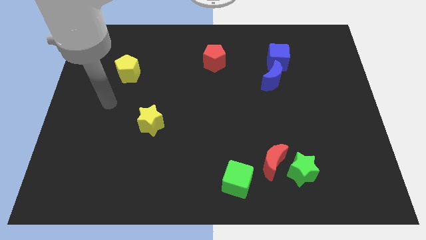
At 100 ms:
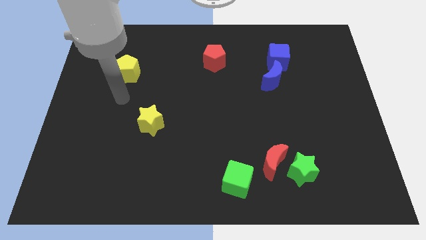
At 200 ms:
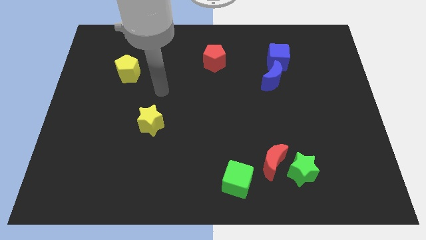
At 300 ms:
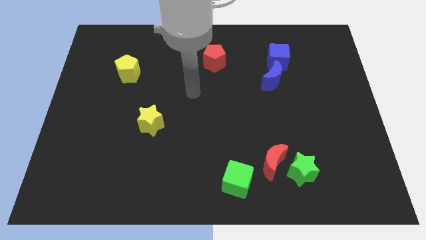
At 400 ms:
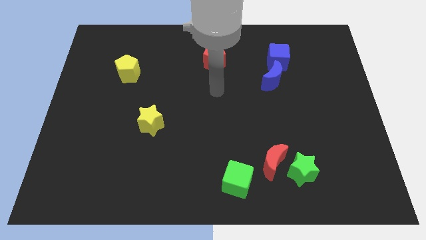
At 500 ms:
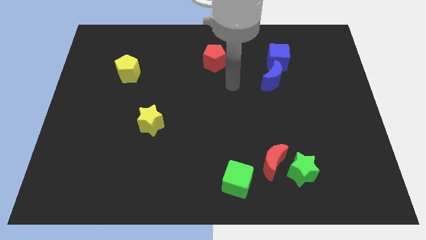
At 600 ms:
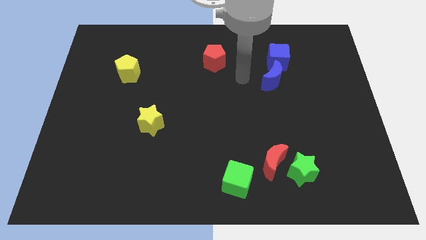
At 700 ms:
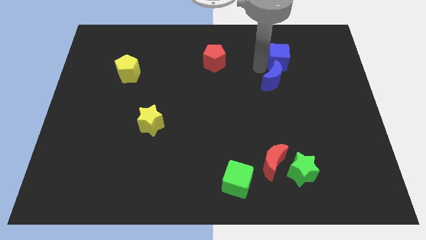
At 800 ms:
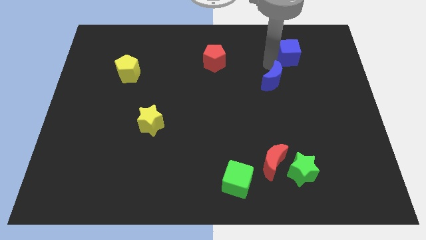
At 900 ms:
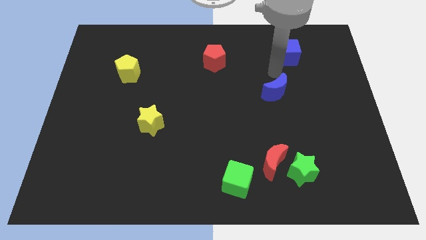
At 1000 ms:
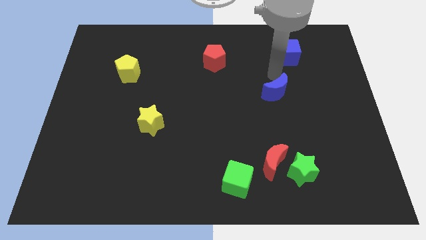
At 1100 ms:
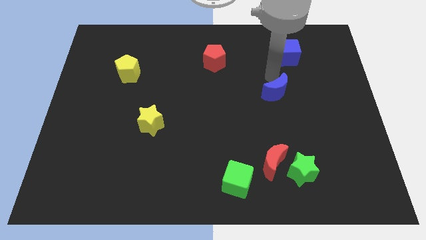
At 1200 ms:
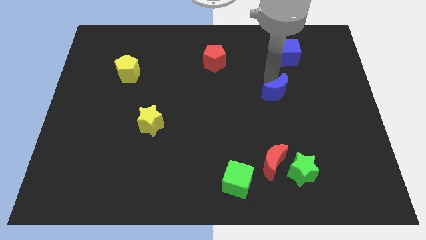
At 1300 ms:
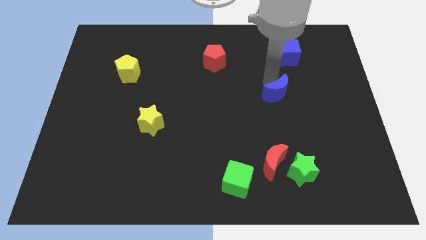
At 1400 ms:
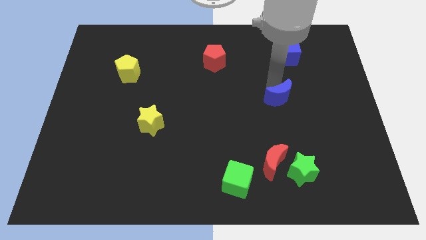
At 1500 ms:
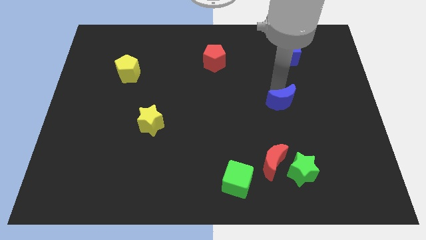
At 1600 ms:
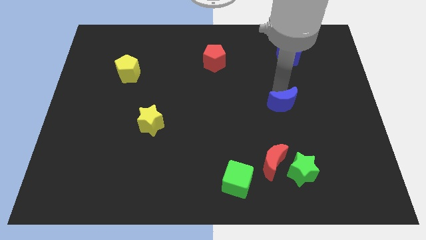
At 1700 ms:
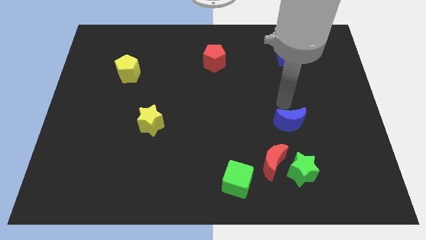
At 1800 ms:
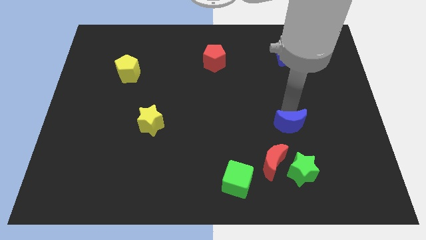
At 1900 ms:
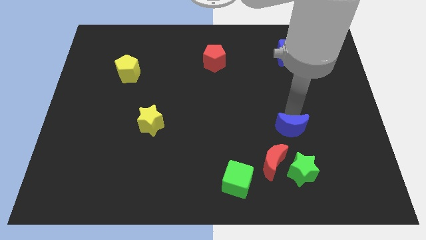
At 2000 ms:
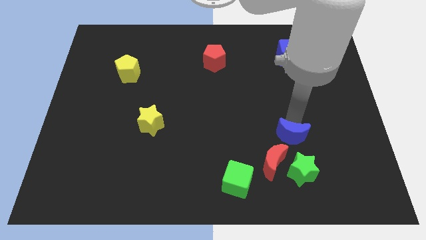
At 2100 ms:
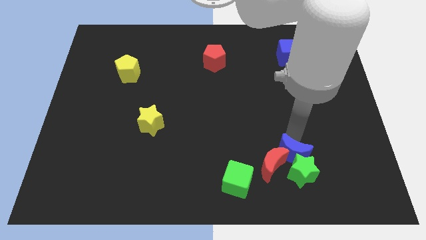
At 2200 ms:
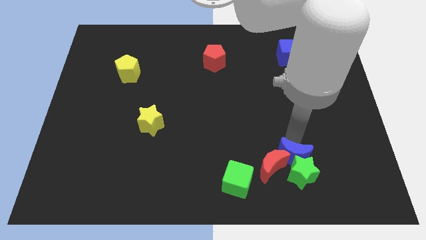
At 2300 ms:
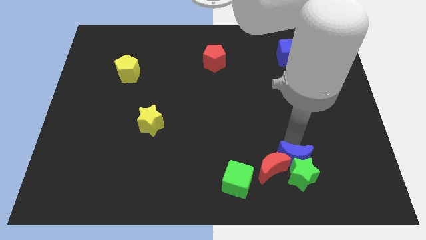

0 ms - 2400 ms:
slide the blue moon to the green star

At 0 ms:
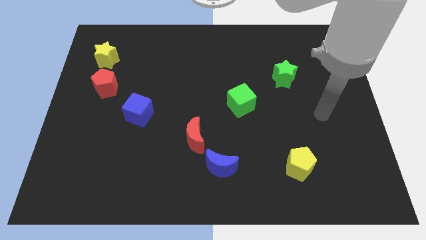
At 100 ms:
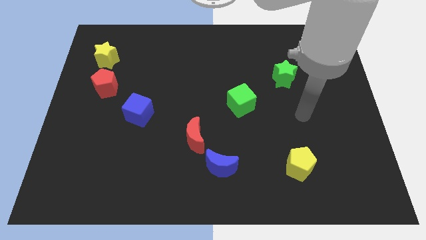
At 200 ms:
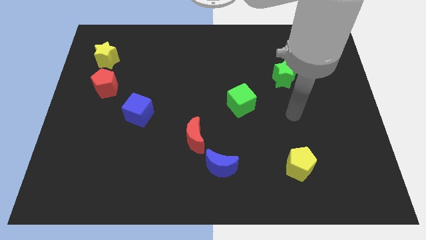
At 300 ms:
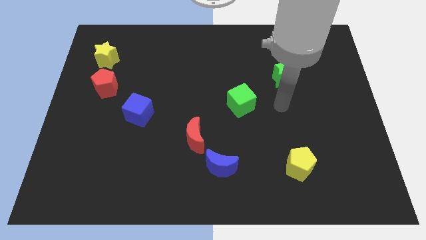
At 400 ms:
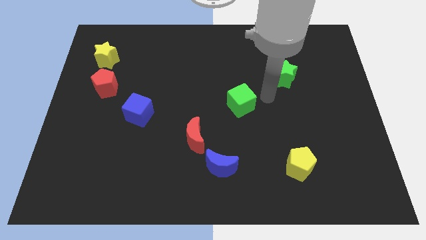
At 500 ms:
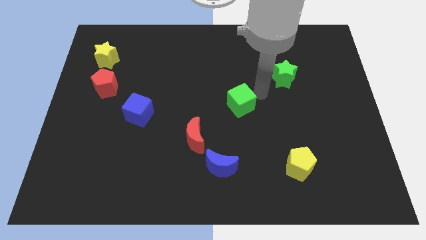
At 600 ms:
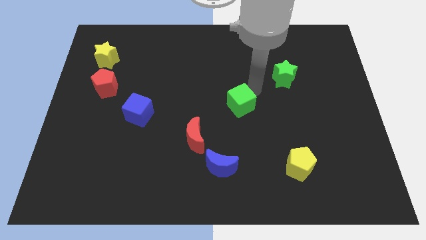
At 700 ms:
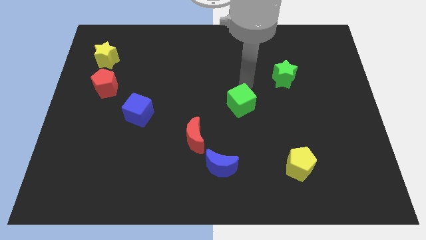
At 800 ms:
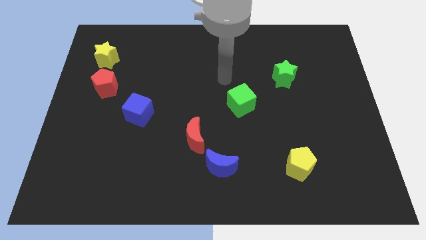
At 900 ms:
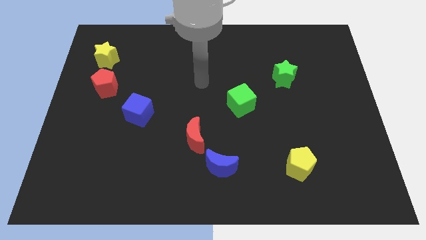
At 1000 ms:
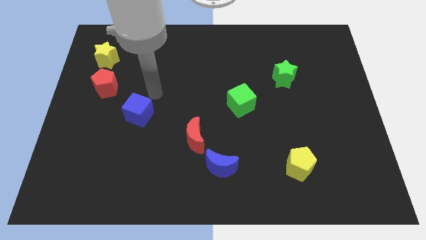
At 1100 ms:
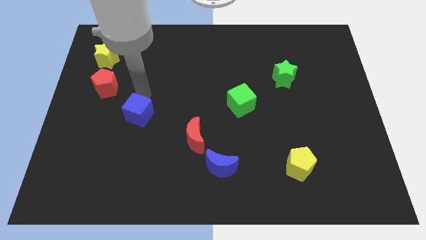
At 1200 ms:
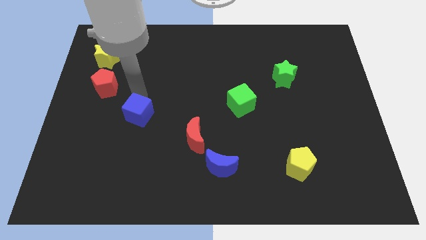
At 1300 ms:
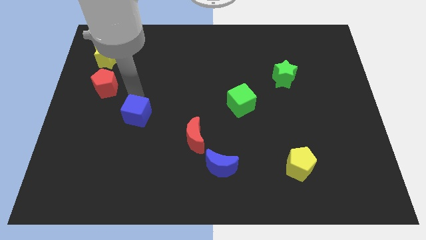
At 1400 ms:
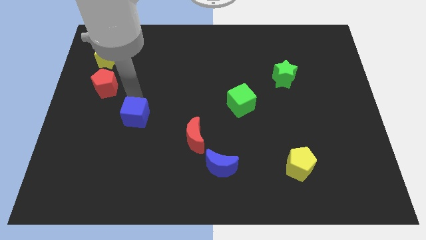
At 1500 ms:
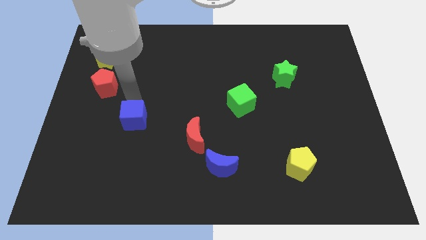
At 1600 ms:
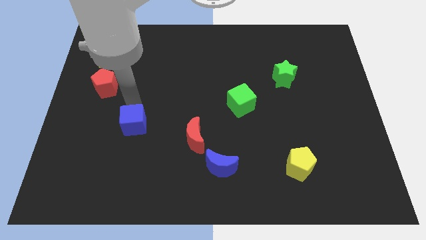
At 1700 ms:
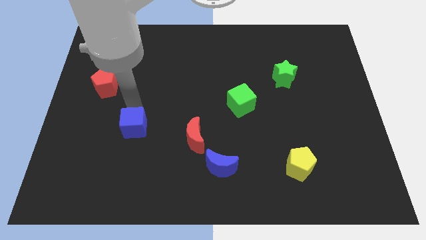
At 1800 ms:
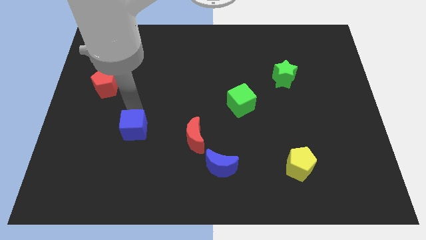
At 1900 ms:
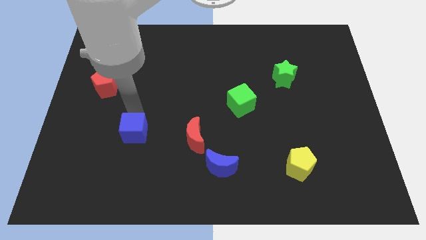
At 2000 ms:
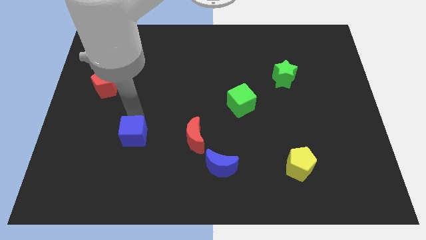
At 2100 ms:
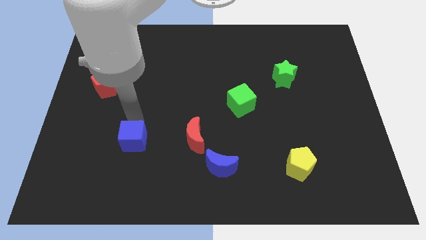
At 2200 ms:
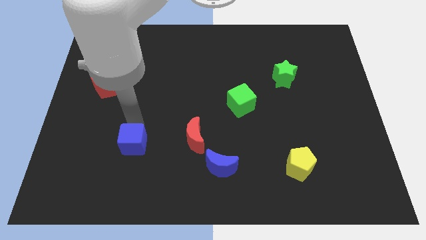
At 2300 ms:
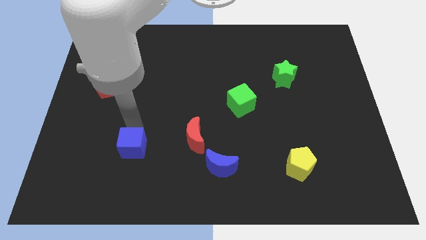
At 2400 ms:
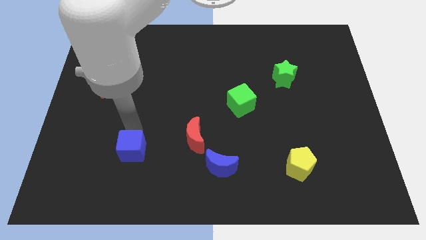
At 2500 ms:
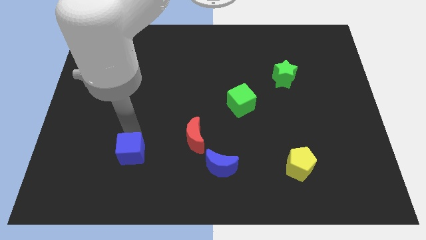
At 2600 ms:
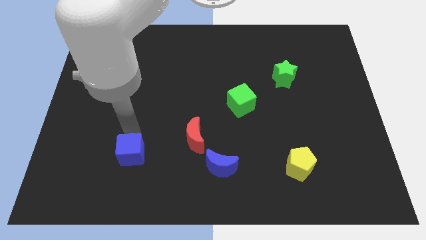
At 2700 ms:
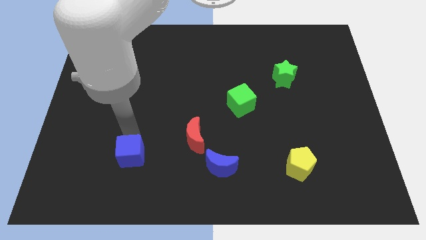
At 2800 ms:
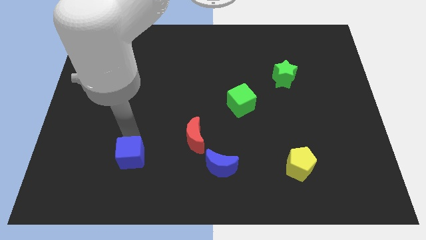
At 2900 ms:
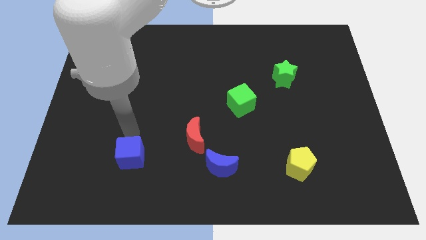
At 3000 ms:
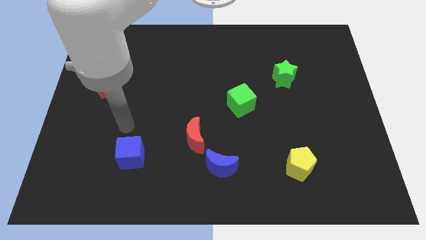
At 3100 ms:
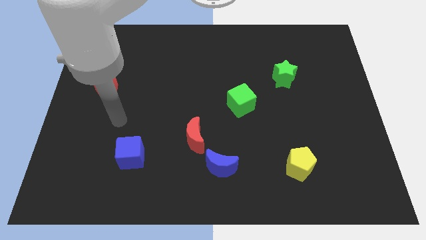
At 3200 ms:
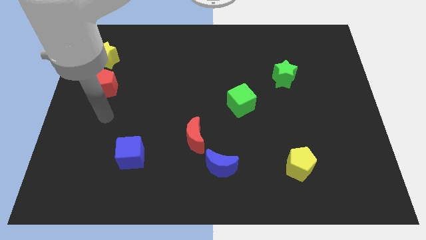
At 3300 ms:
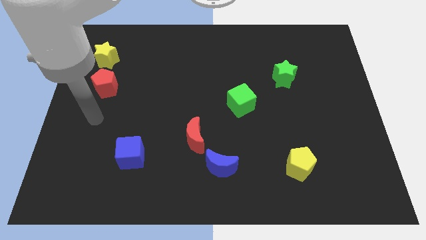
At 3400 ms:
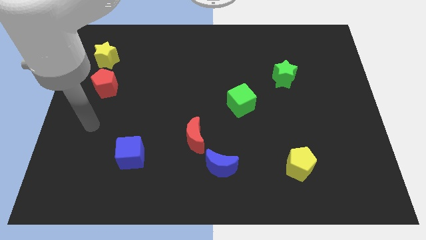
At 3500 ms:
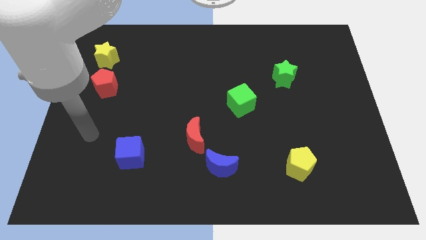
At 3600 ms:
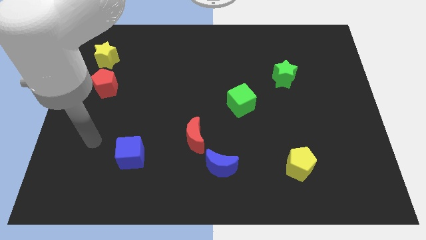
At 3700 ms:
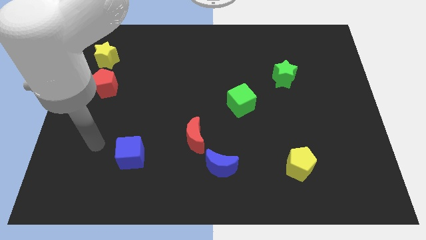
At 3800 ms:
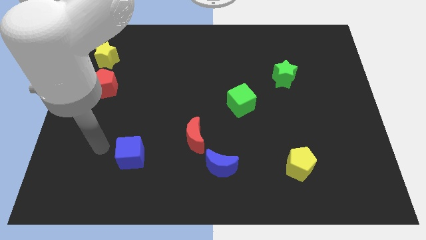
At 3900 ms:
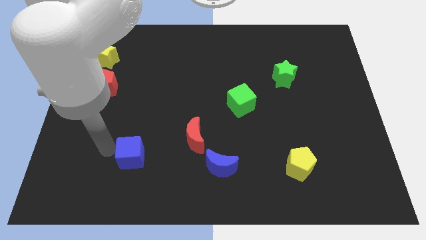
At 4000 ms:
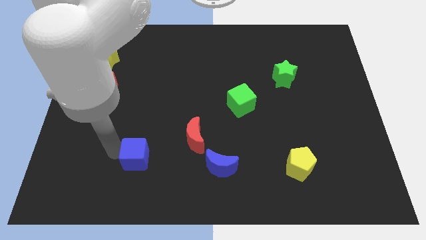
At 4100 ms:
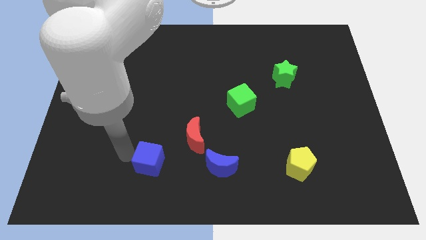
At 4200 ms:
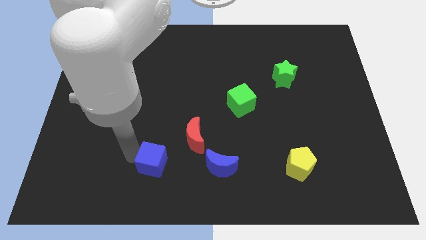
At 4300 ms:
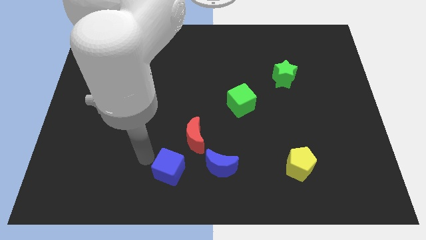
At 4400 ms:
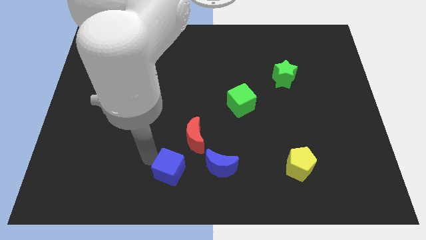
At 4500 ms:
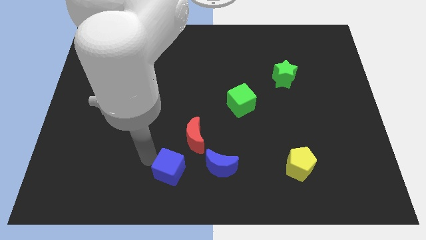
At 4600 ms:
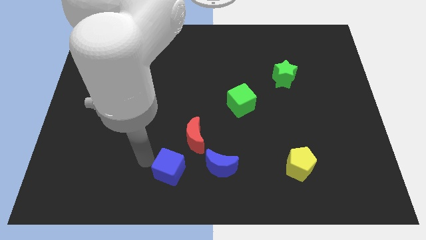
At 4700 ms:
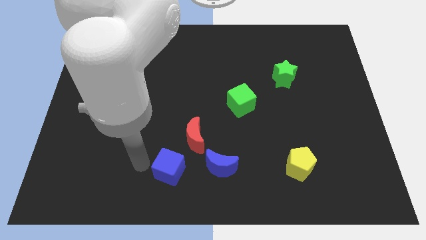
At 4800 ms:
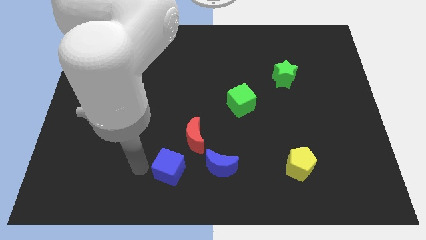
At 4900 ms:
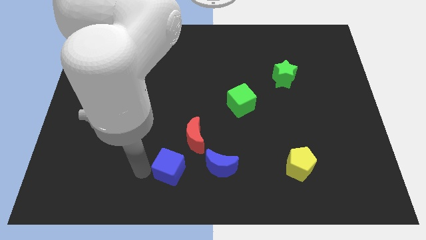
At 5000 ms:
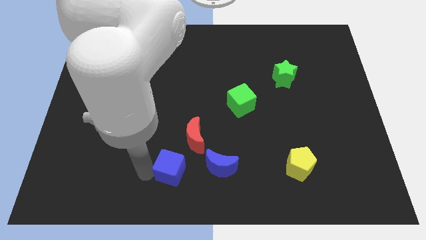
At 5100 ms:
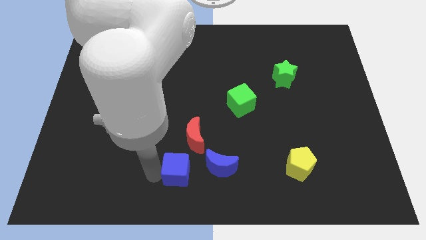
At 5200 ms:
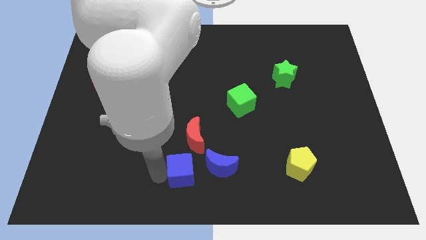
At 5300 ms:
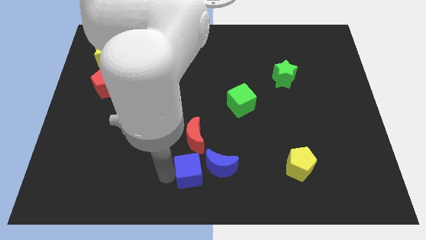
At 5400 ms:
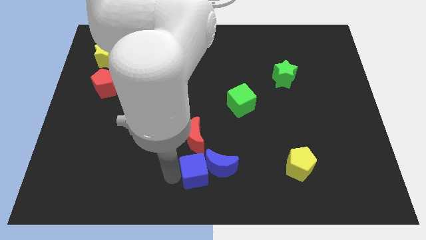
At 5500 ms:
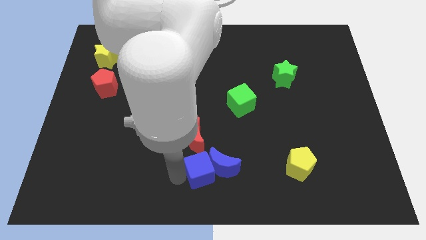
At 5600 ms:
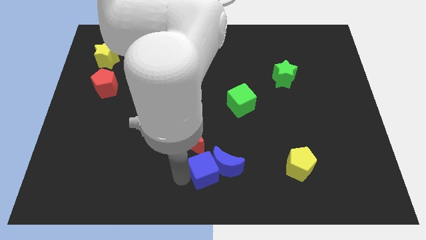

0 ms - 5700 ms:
slide the blue cube close to the blue moon

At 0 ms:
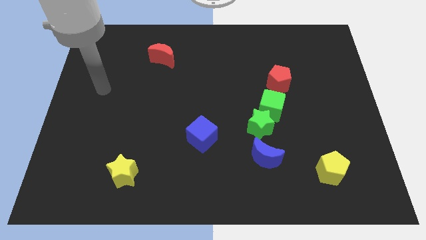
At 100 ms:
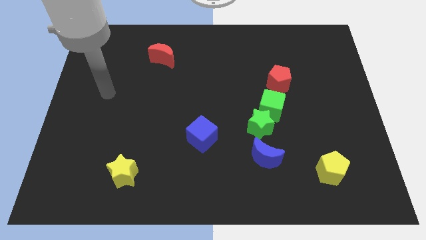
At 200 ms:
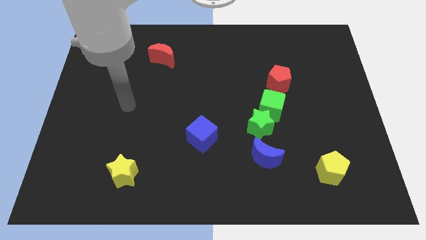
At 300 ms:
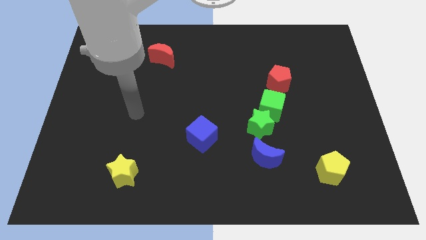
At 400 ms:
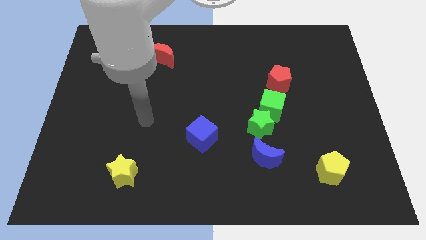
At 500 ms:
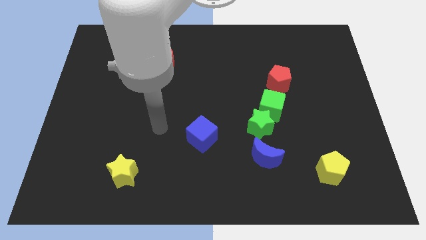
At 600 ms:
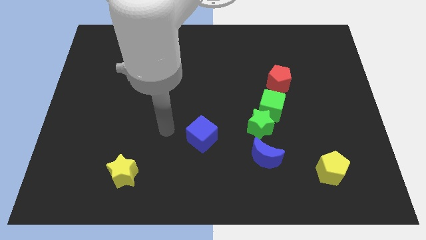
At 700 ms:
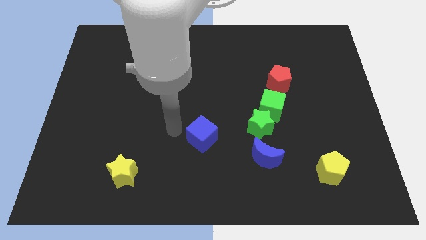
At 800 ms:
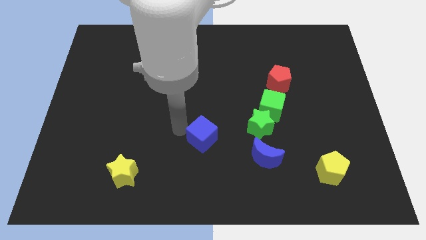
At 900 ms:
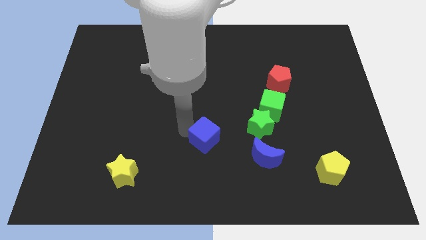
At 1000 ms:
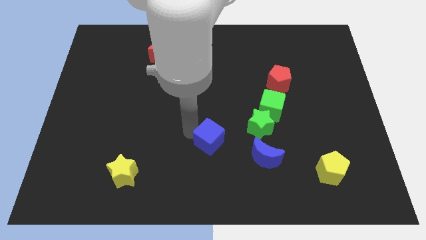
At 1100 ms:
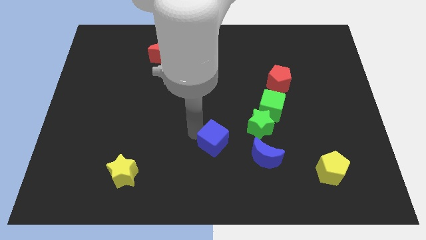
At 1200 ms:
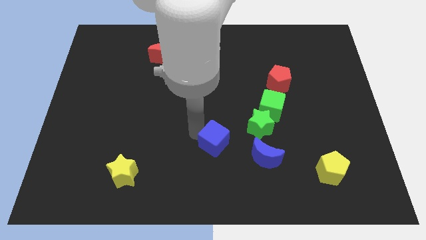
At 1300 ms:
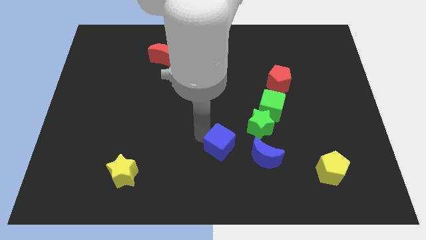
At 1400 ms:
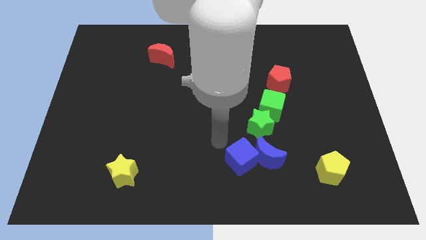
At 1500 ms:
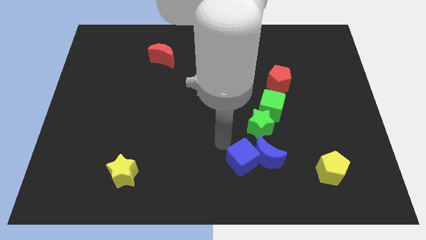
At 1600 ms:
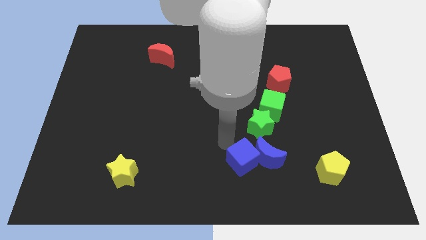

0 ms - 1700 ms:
put the blue cube close to the blue moon
